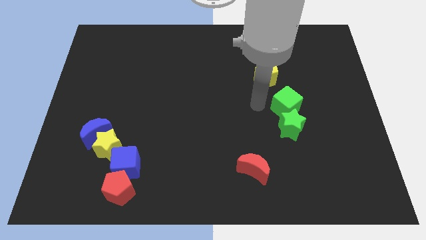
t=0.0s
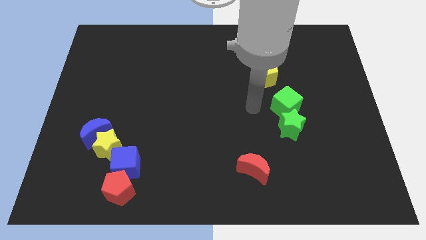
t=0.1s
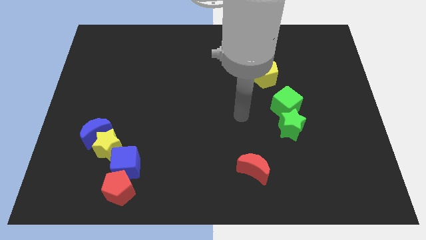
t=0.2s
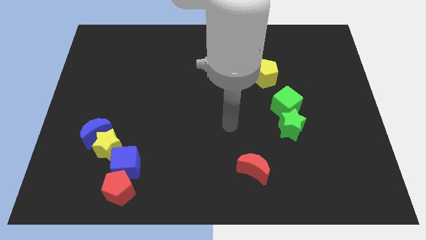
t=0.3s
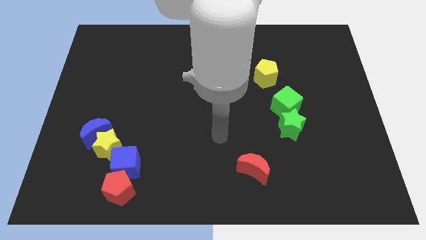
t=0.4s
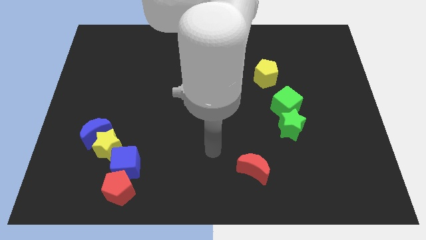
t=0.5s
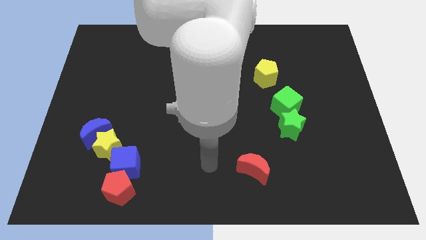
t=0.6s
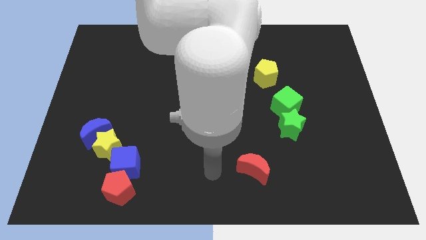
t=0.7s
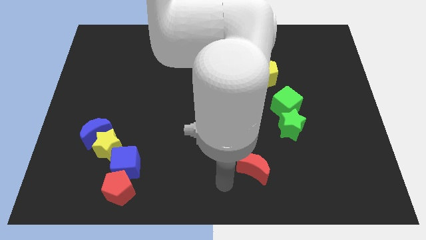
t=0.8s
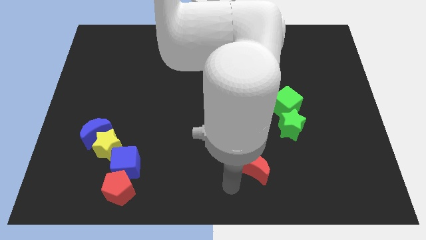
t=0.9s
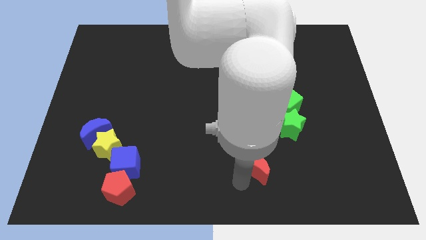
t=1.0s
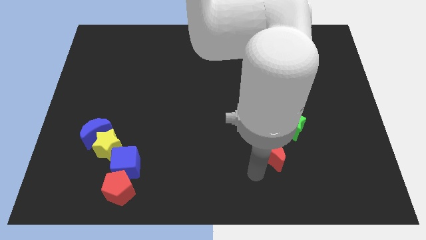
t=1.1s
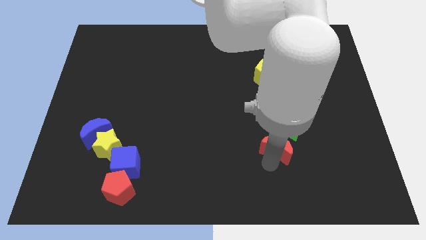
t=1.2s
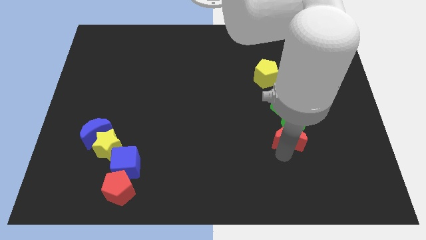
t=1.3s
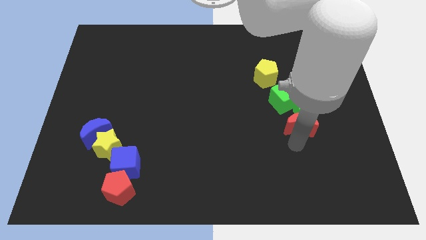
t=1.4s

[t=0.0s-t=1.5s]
move the red crescent into the green star

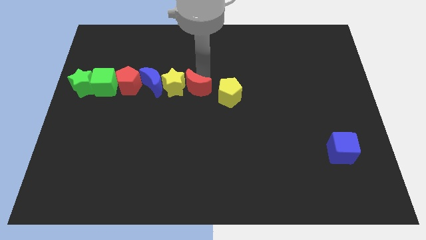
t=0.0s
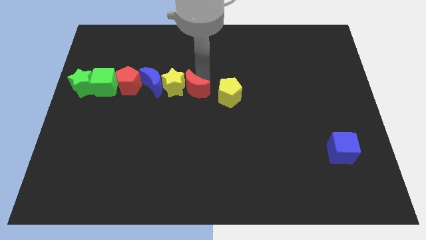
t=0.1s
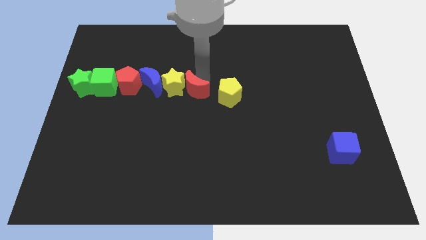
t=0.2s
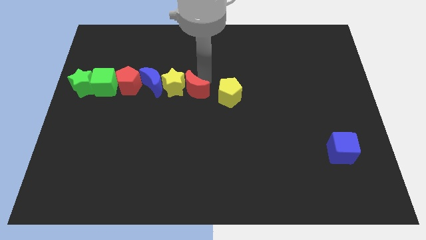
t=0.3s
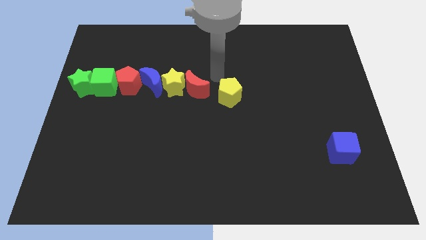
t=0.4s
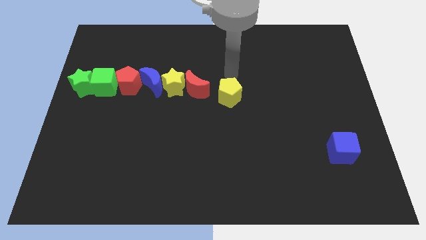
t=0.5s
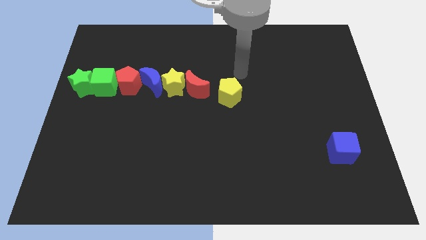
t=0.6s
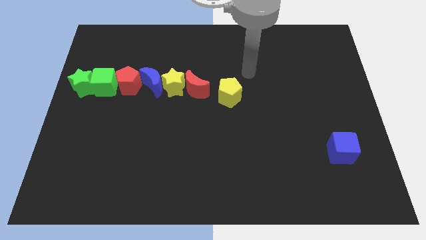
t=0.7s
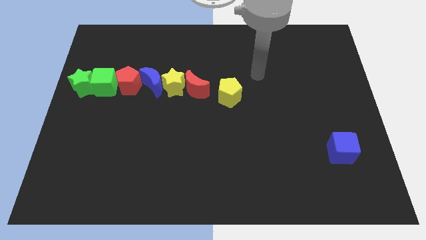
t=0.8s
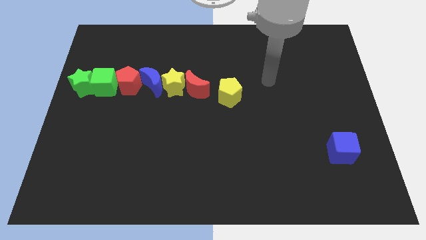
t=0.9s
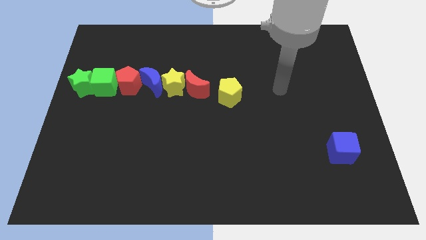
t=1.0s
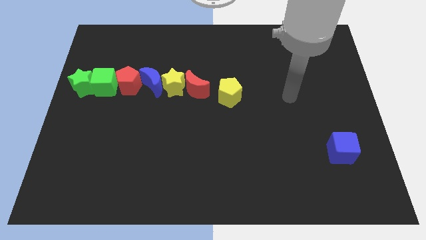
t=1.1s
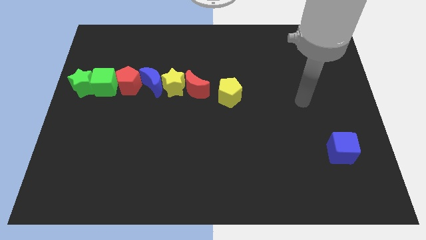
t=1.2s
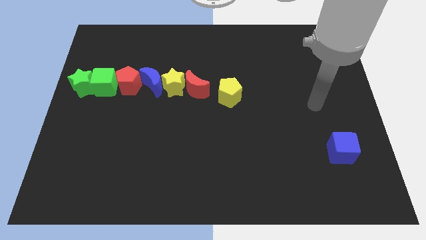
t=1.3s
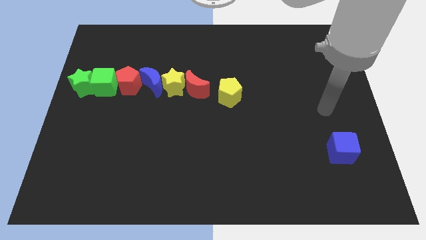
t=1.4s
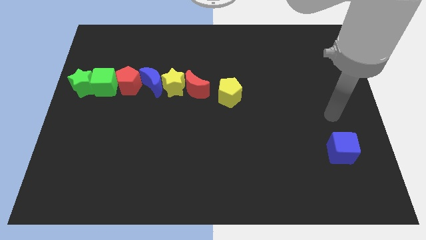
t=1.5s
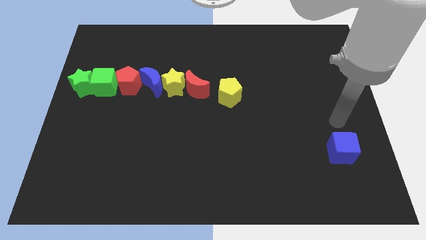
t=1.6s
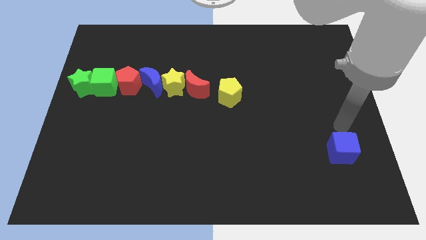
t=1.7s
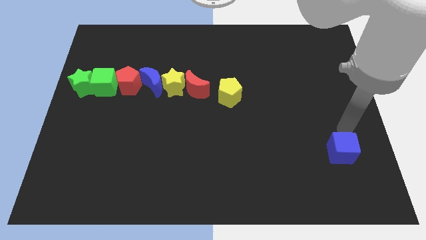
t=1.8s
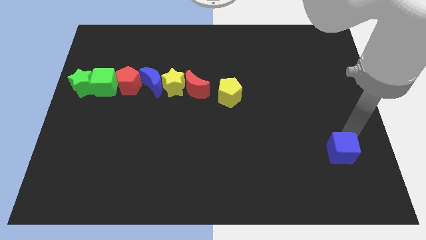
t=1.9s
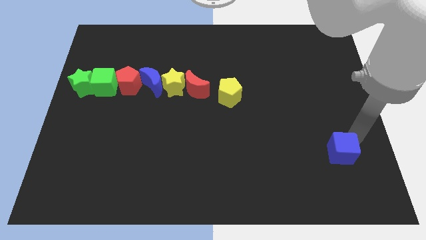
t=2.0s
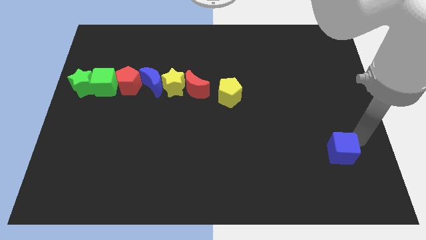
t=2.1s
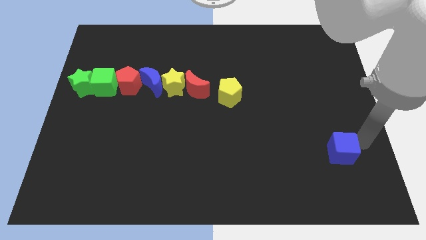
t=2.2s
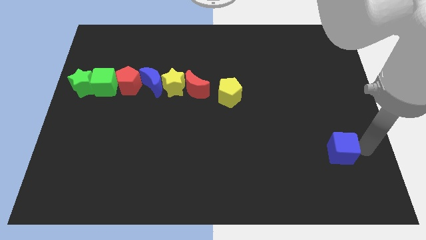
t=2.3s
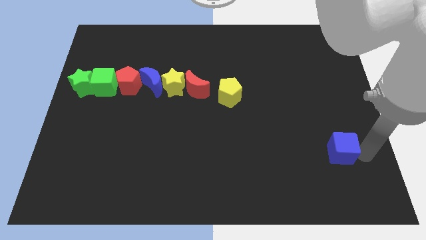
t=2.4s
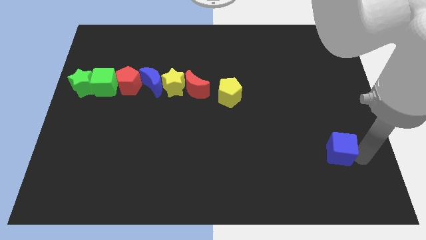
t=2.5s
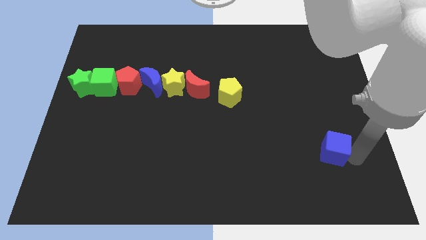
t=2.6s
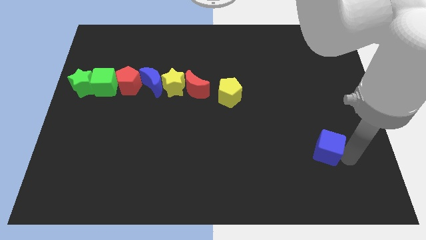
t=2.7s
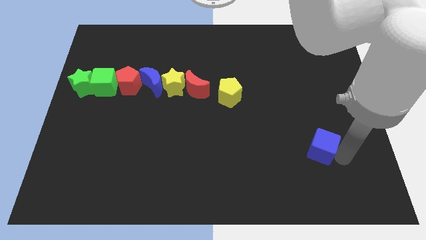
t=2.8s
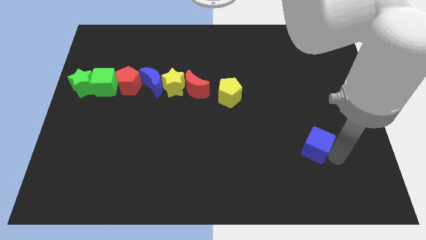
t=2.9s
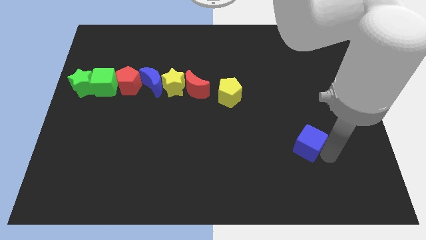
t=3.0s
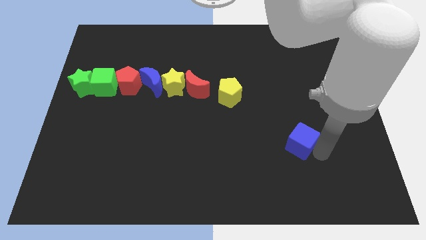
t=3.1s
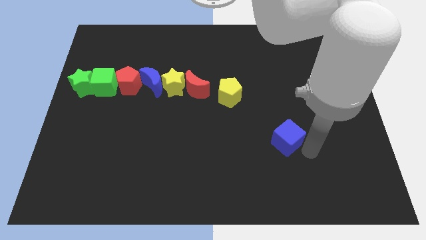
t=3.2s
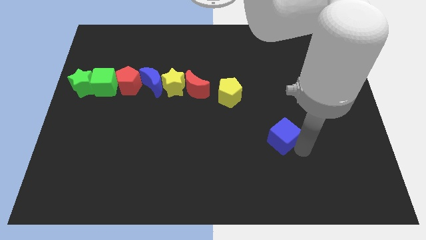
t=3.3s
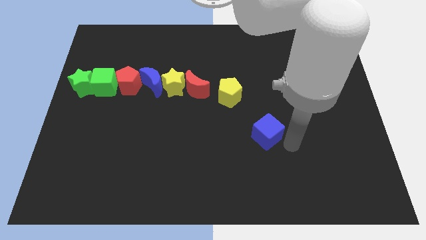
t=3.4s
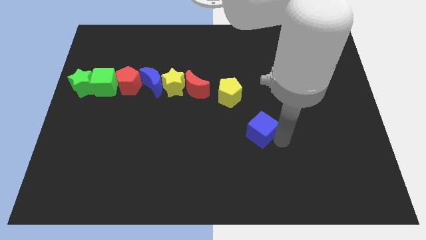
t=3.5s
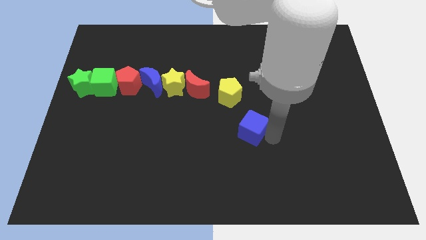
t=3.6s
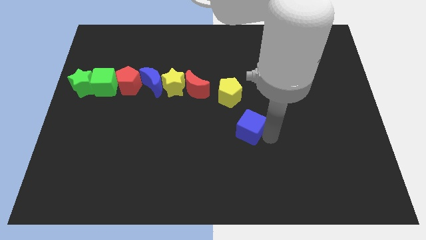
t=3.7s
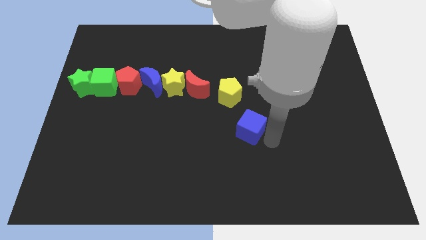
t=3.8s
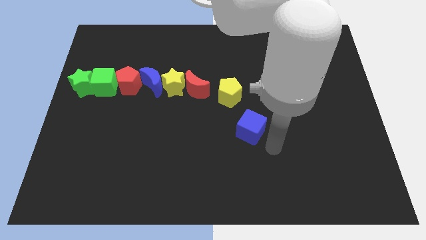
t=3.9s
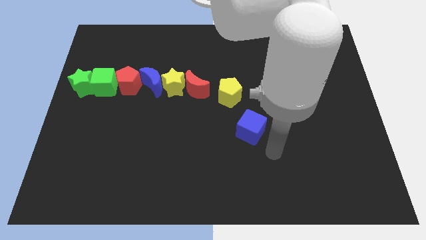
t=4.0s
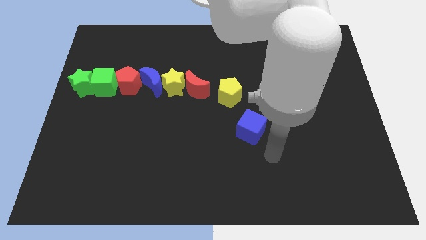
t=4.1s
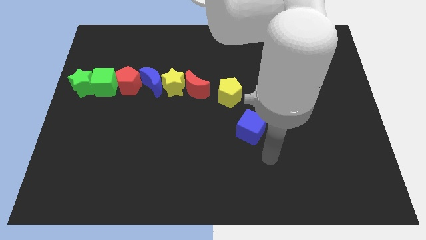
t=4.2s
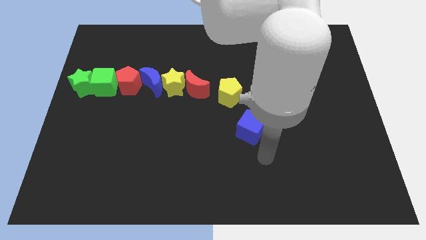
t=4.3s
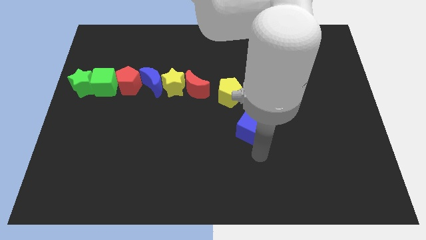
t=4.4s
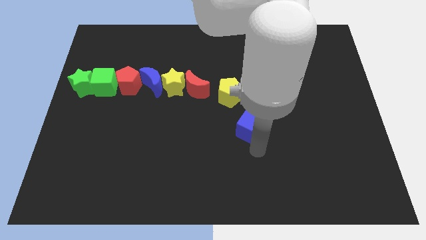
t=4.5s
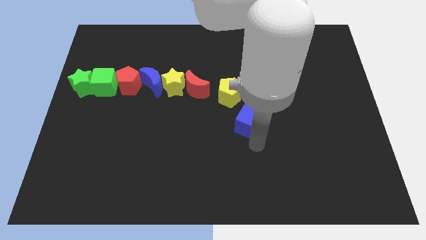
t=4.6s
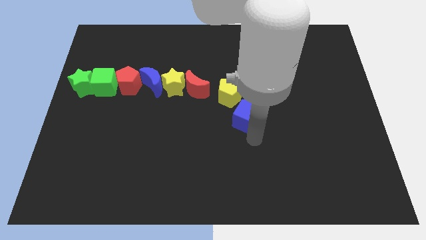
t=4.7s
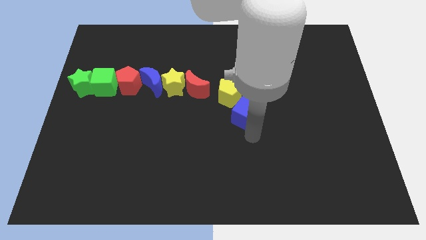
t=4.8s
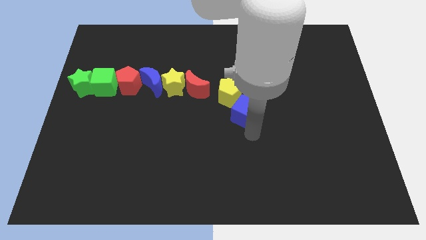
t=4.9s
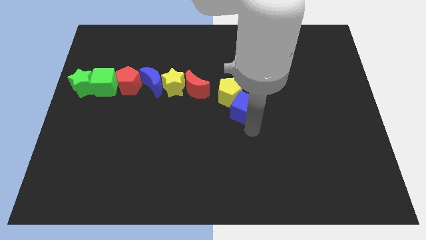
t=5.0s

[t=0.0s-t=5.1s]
push blue cube into yellow pentagon

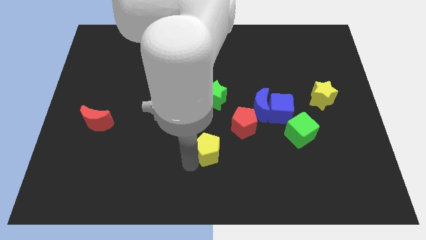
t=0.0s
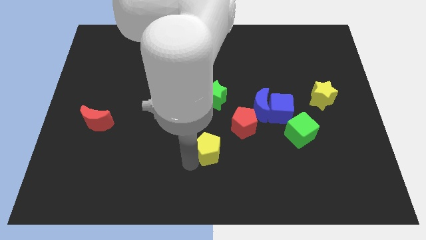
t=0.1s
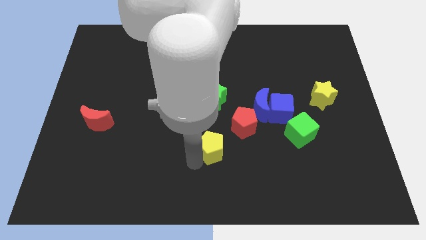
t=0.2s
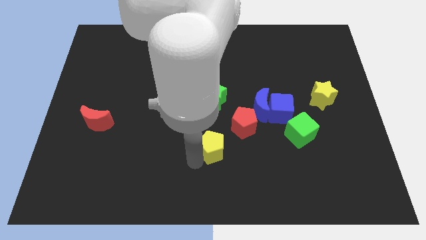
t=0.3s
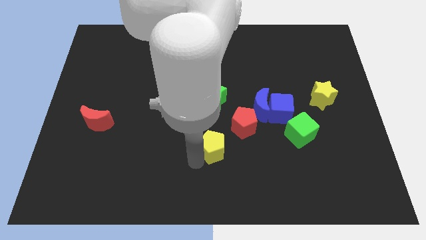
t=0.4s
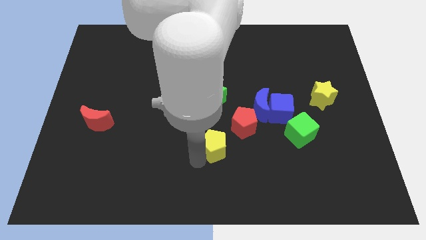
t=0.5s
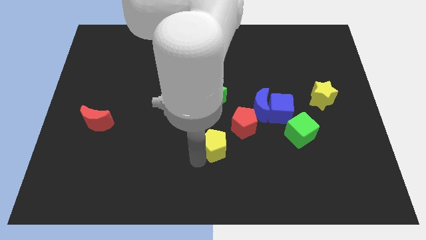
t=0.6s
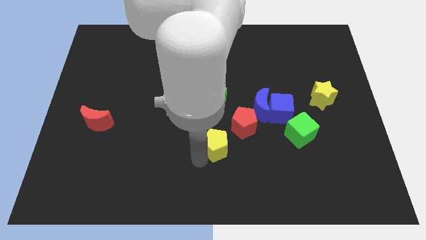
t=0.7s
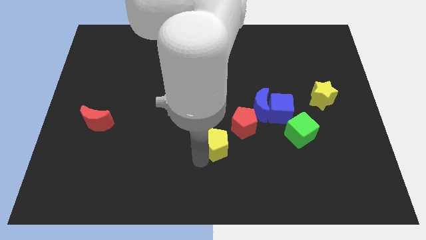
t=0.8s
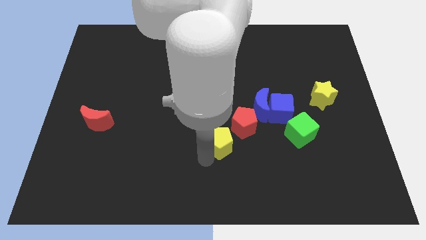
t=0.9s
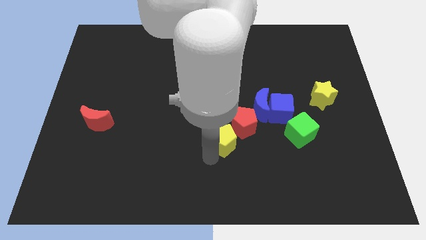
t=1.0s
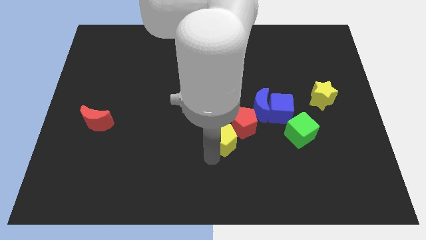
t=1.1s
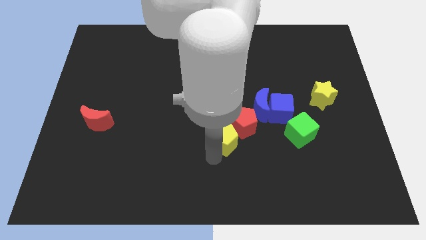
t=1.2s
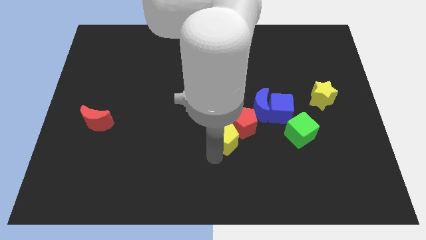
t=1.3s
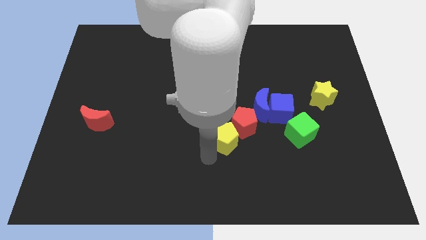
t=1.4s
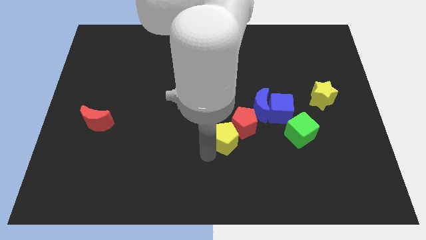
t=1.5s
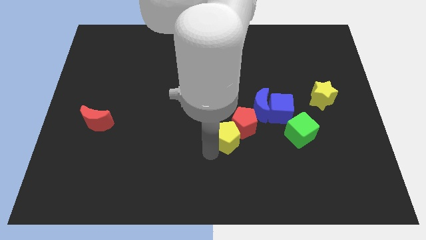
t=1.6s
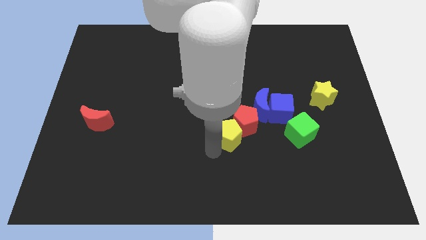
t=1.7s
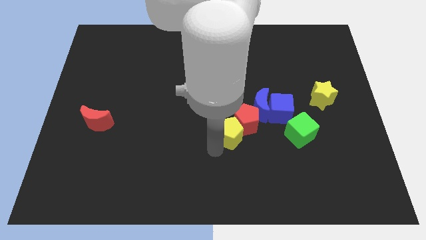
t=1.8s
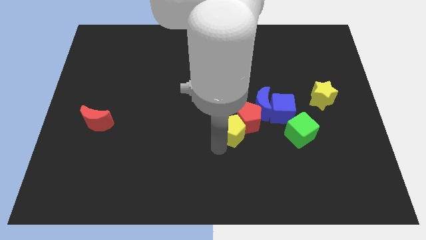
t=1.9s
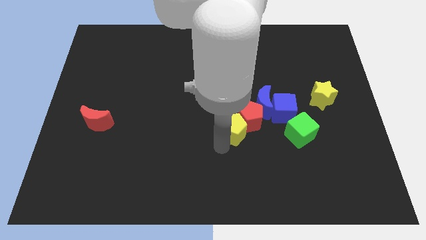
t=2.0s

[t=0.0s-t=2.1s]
slide yellow pentagon into red pentagon

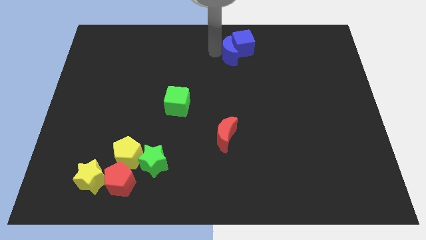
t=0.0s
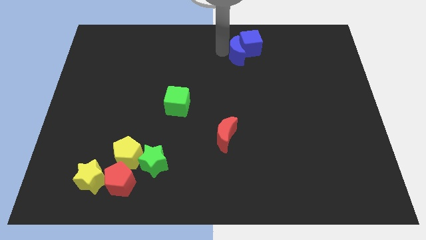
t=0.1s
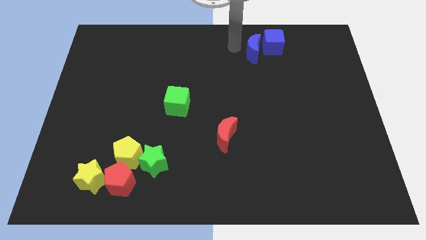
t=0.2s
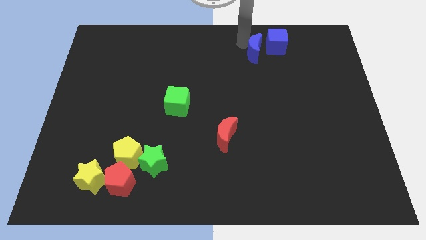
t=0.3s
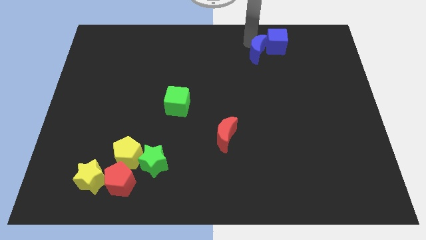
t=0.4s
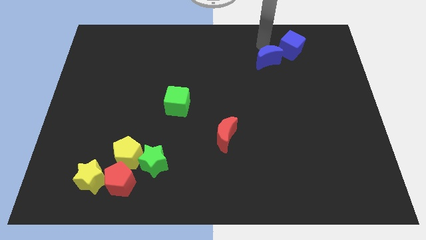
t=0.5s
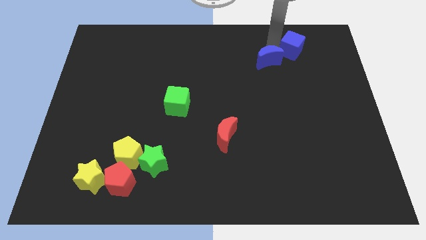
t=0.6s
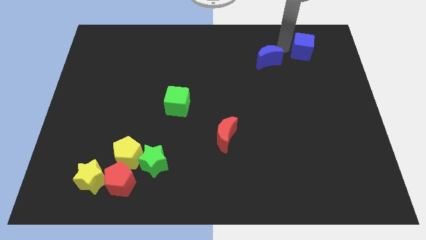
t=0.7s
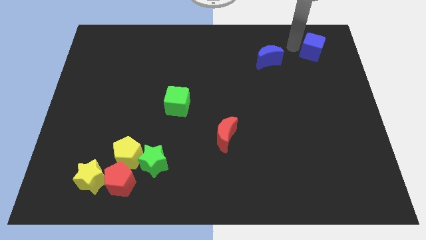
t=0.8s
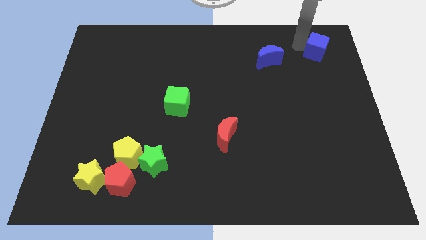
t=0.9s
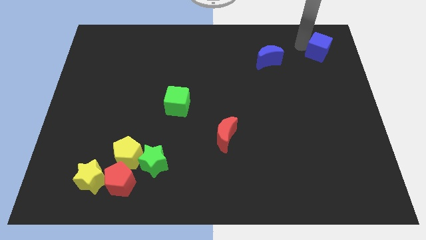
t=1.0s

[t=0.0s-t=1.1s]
separate the blue cube from the blue crescent
